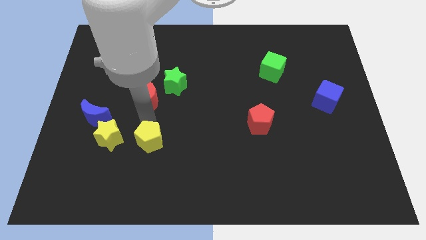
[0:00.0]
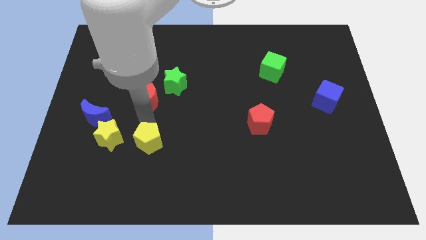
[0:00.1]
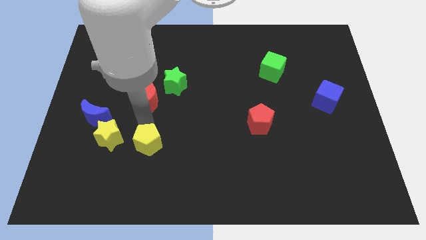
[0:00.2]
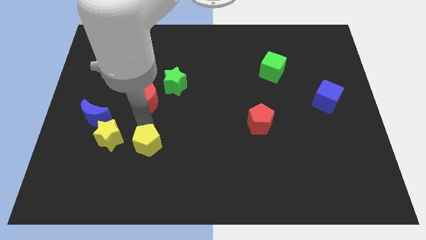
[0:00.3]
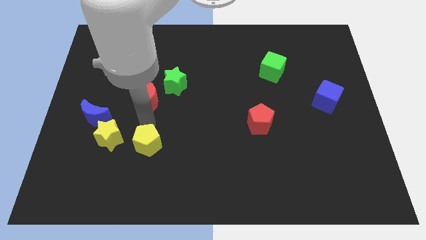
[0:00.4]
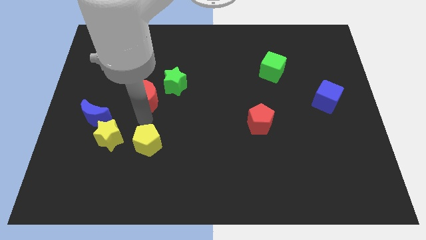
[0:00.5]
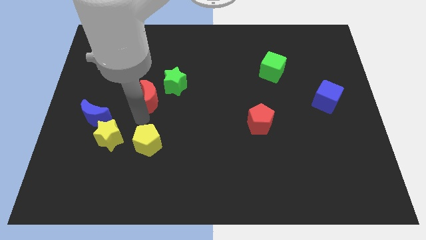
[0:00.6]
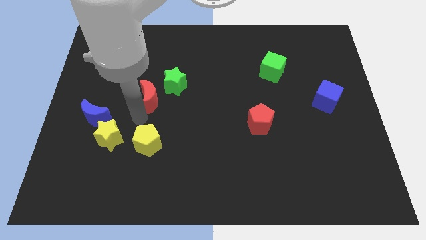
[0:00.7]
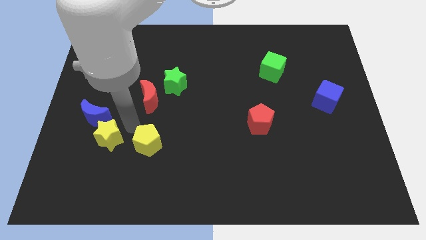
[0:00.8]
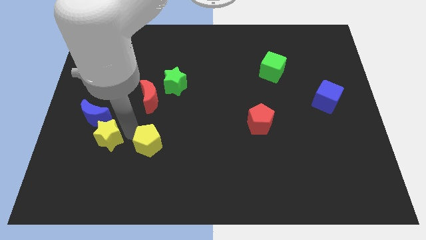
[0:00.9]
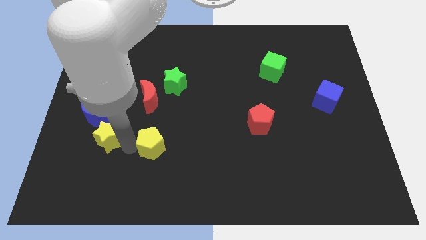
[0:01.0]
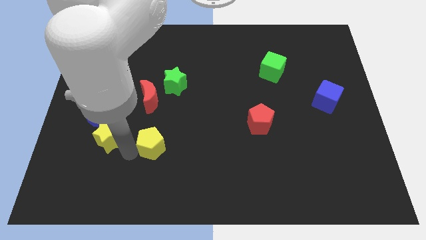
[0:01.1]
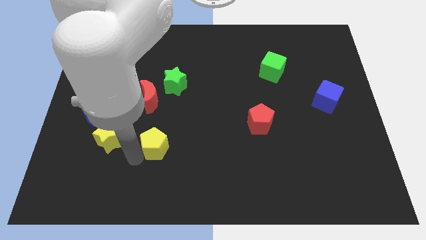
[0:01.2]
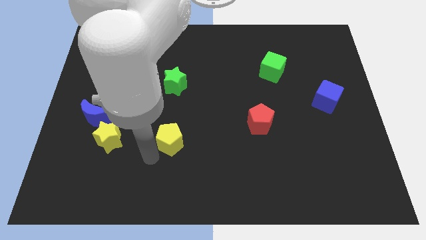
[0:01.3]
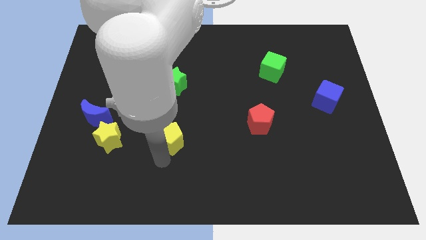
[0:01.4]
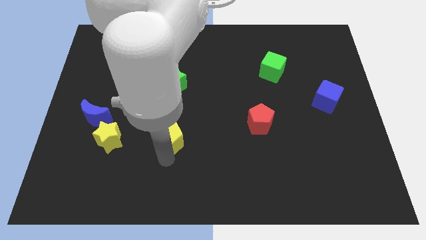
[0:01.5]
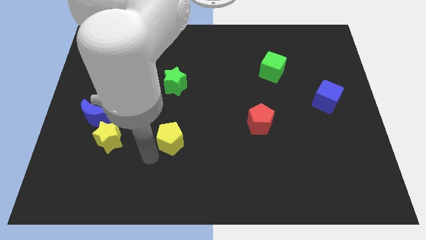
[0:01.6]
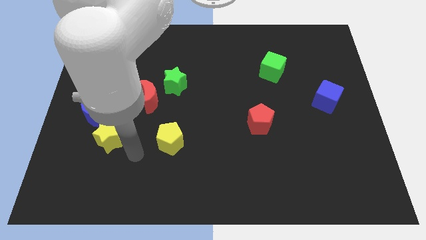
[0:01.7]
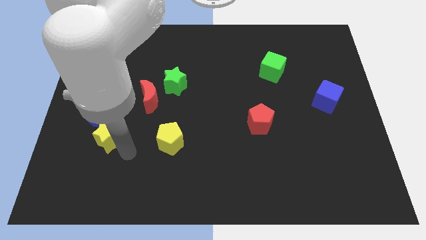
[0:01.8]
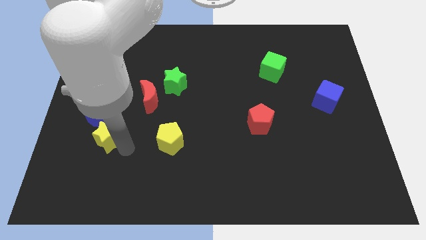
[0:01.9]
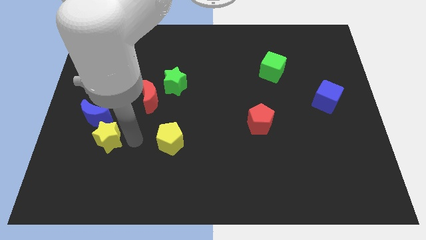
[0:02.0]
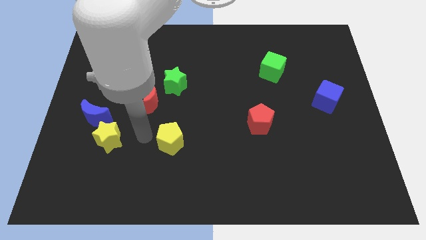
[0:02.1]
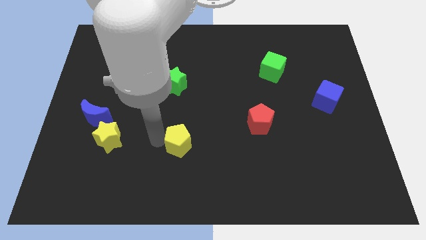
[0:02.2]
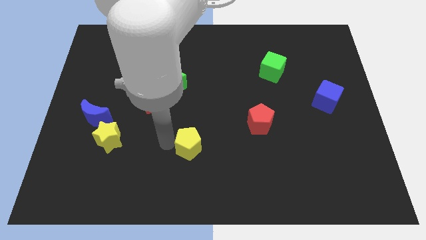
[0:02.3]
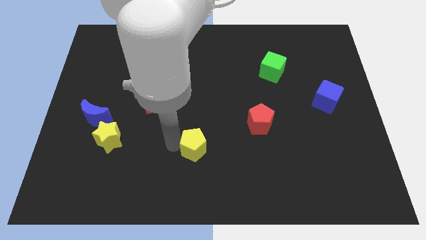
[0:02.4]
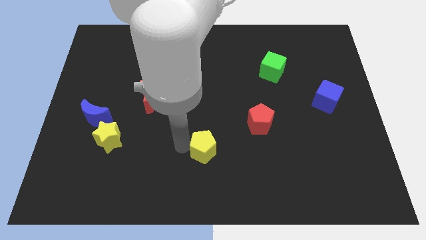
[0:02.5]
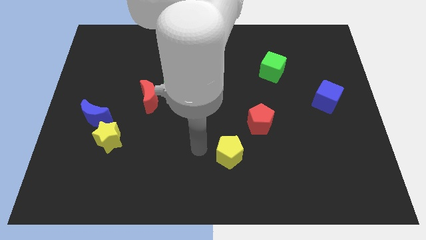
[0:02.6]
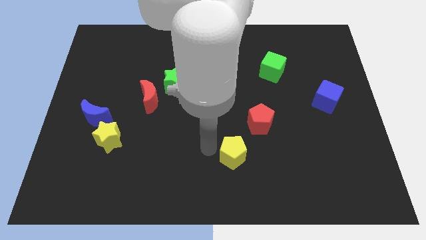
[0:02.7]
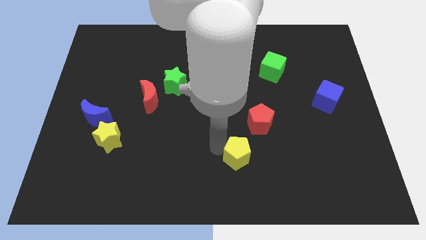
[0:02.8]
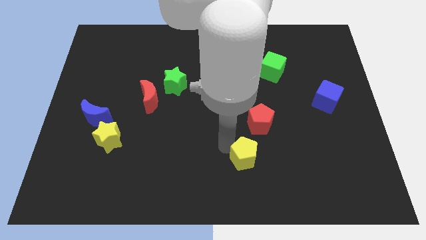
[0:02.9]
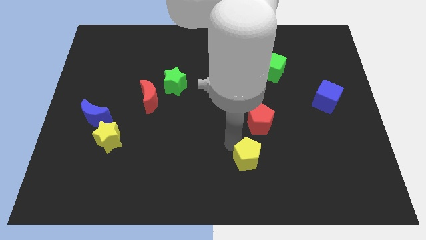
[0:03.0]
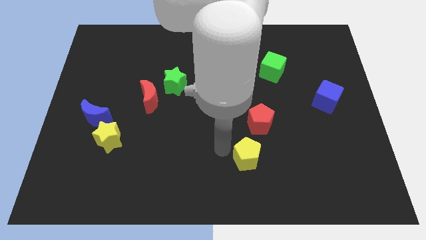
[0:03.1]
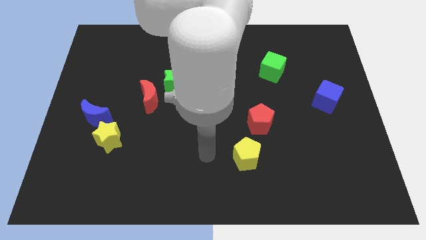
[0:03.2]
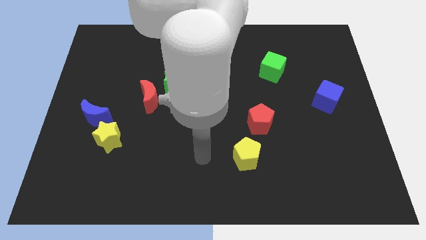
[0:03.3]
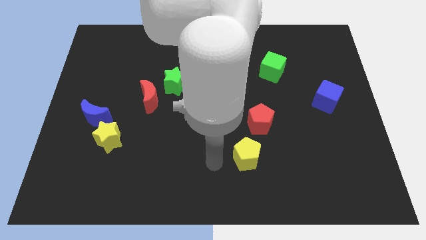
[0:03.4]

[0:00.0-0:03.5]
move the yellow pentagon to the bottom of the red pentagon

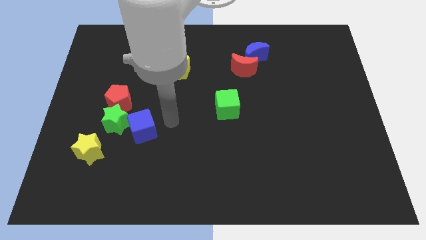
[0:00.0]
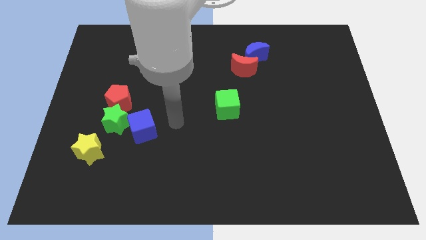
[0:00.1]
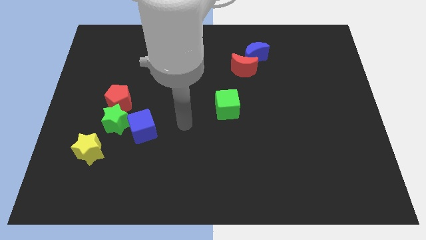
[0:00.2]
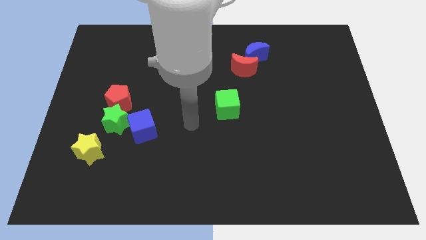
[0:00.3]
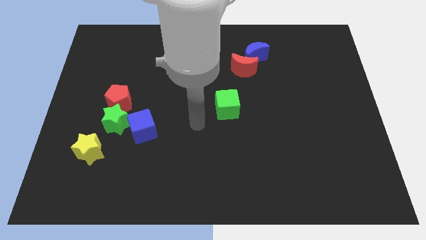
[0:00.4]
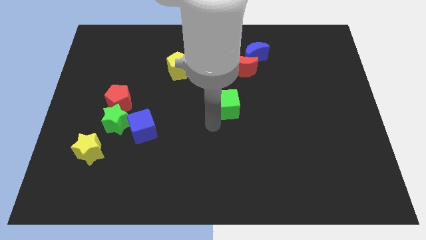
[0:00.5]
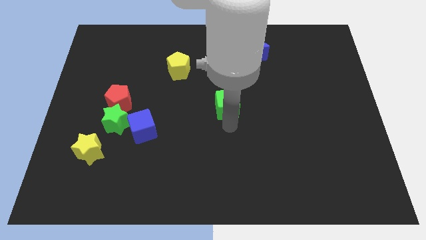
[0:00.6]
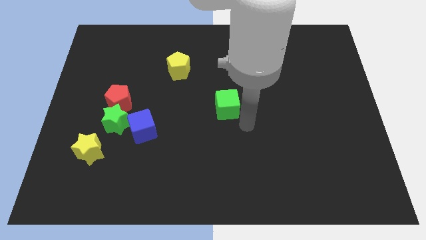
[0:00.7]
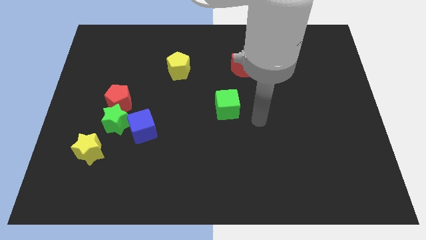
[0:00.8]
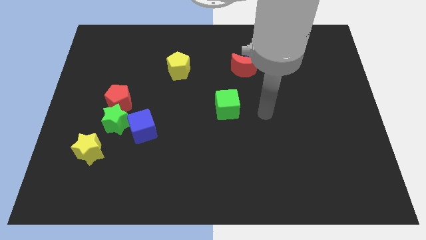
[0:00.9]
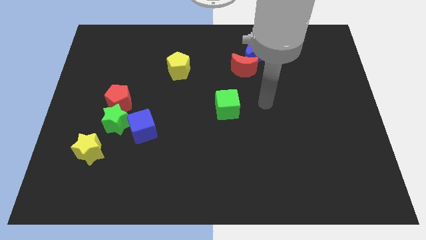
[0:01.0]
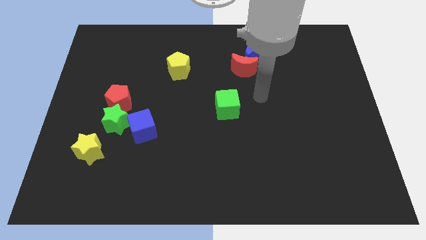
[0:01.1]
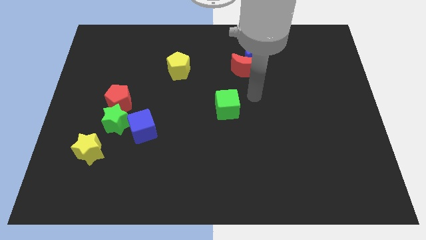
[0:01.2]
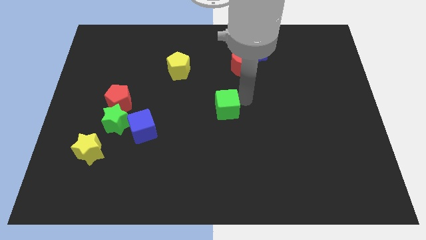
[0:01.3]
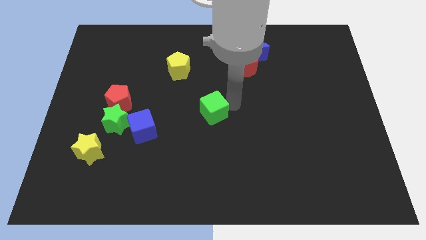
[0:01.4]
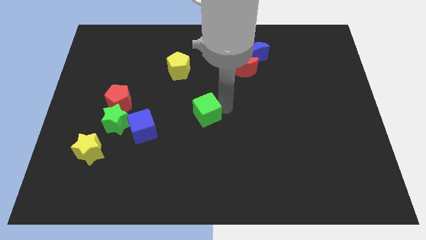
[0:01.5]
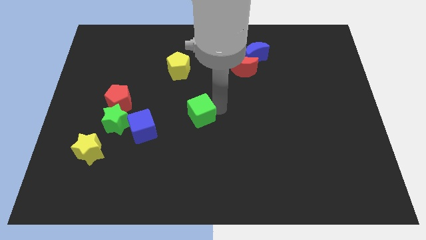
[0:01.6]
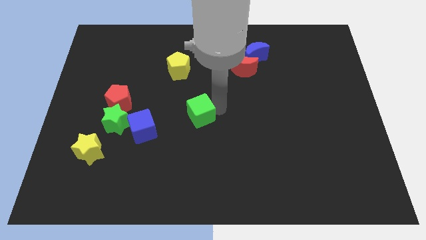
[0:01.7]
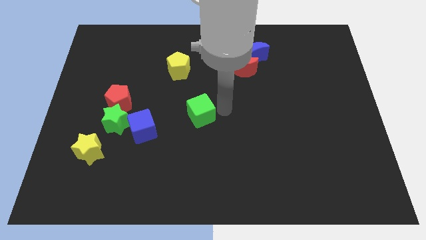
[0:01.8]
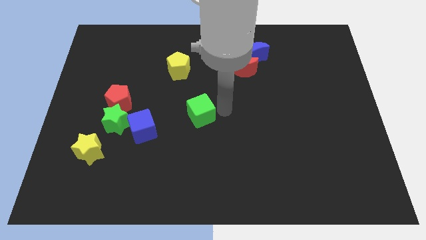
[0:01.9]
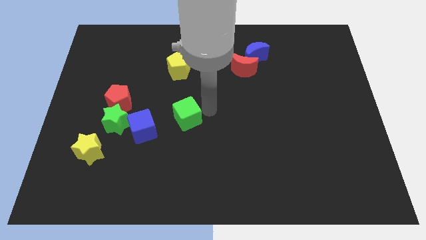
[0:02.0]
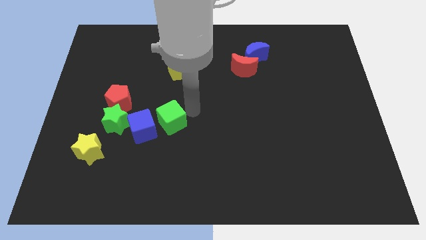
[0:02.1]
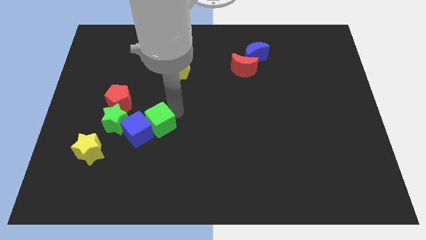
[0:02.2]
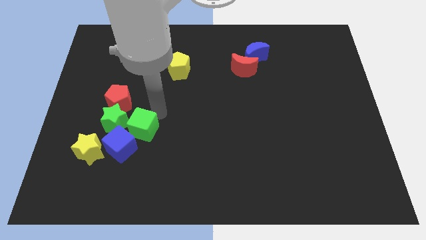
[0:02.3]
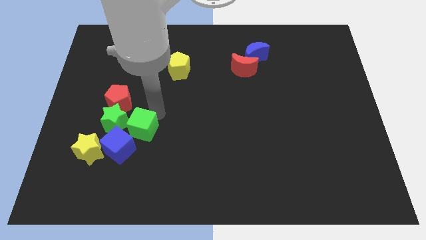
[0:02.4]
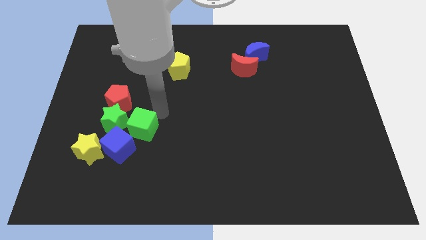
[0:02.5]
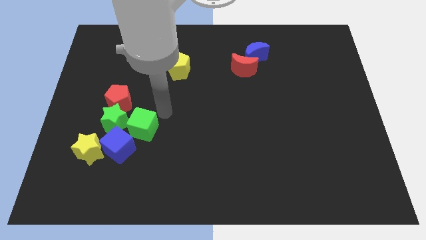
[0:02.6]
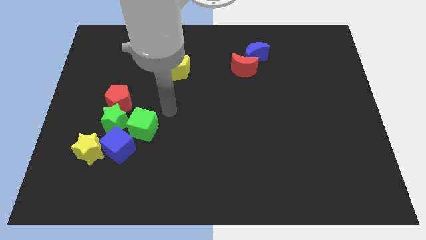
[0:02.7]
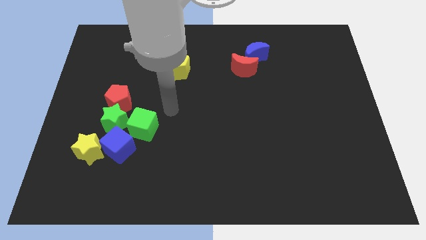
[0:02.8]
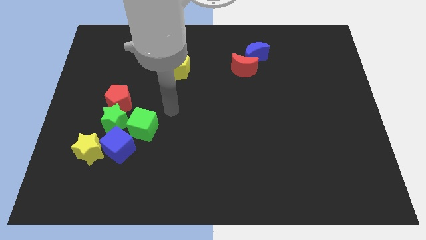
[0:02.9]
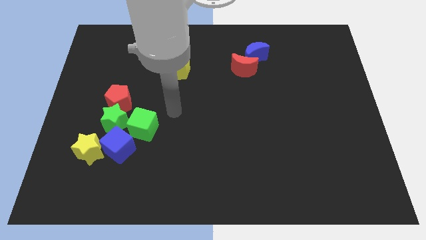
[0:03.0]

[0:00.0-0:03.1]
drag the green cube to the right of green star

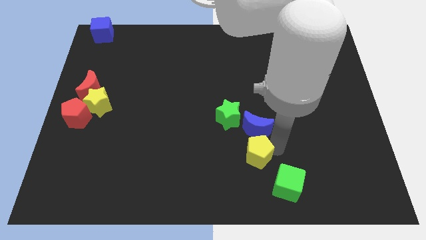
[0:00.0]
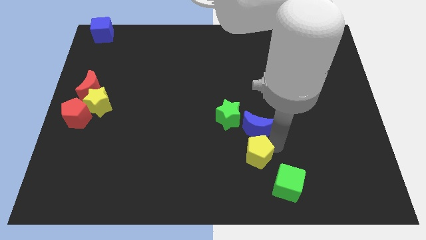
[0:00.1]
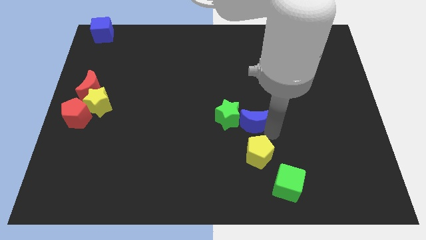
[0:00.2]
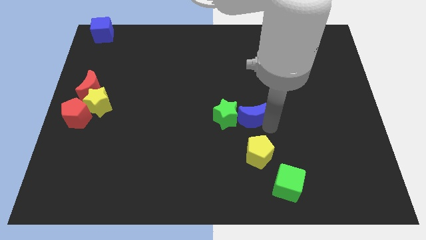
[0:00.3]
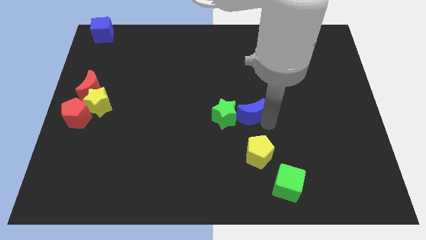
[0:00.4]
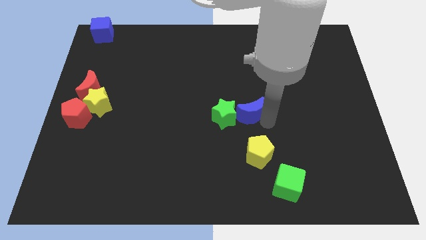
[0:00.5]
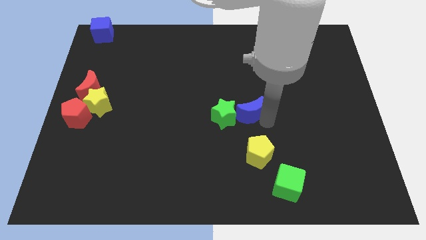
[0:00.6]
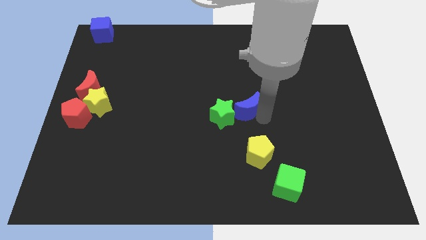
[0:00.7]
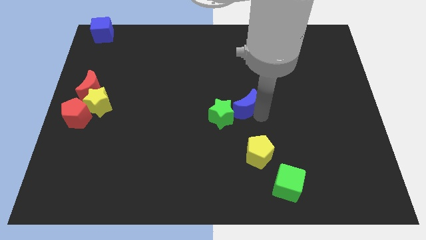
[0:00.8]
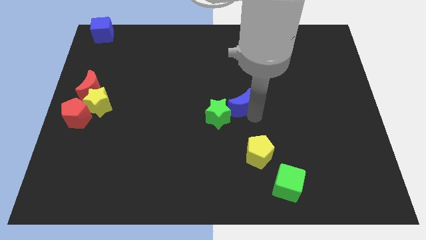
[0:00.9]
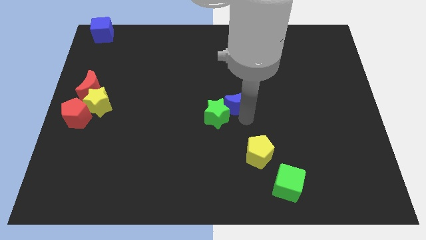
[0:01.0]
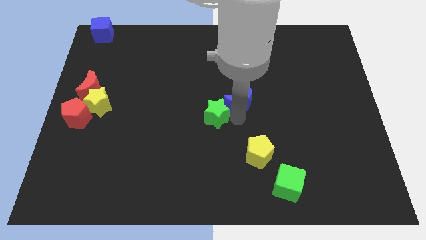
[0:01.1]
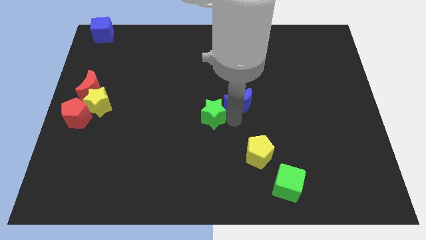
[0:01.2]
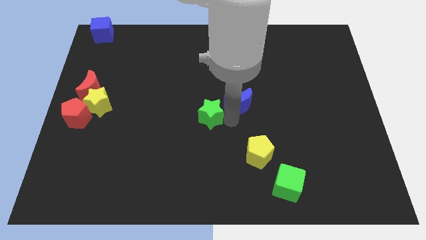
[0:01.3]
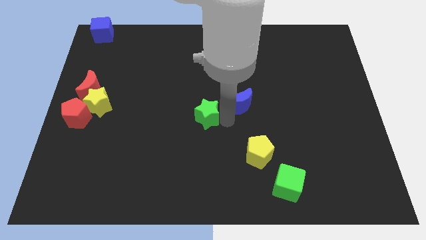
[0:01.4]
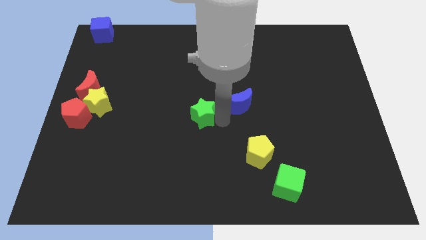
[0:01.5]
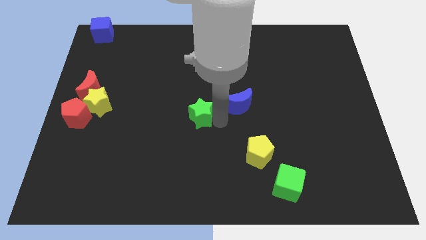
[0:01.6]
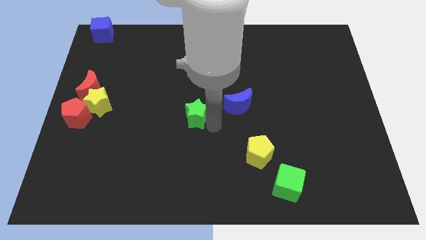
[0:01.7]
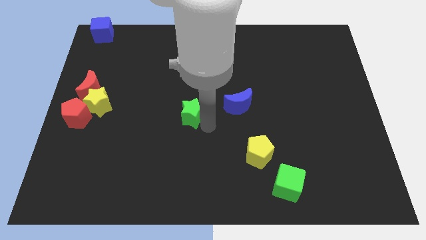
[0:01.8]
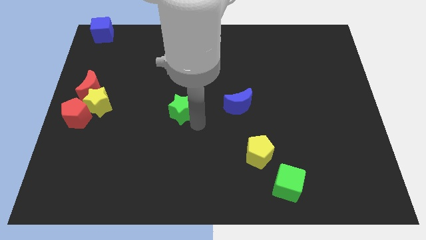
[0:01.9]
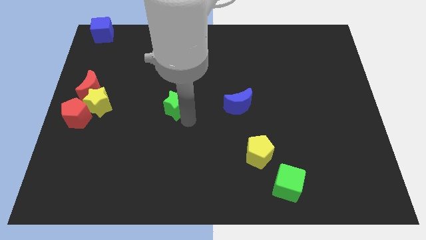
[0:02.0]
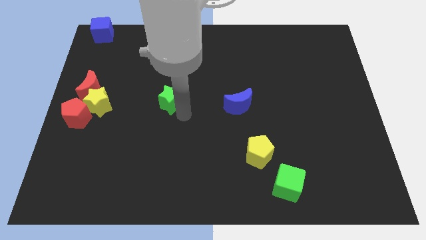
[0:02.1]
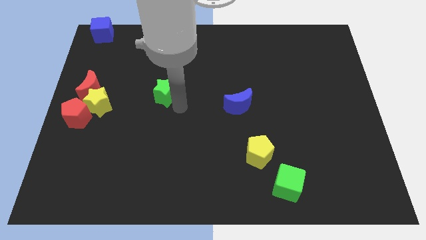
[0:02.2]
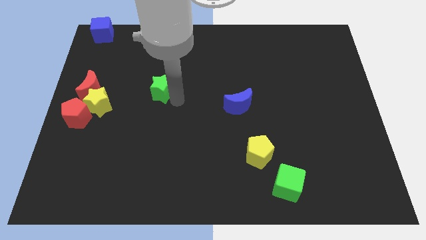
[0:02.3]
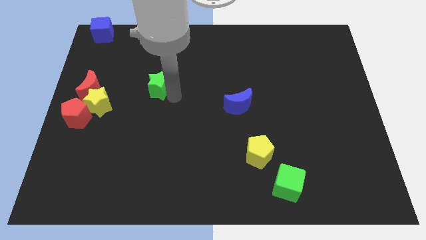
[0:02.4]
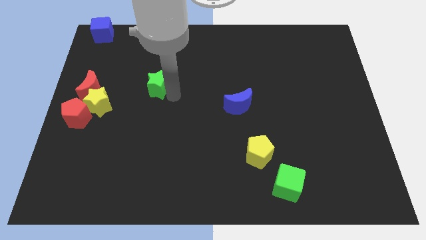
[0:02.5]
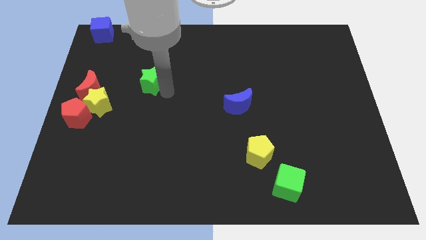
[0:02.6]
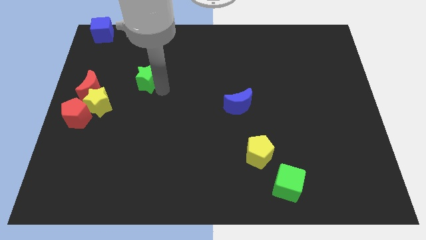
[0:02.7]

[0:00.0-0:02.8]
separate the blue crescent and the green star
